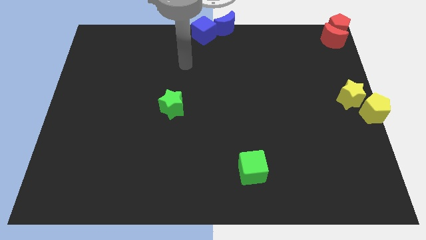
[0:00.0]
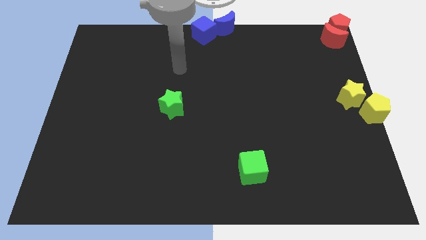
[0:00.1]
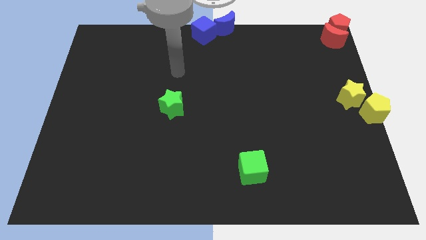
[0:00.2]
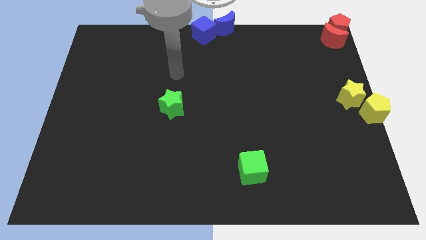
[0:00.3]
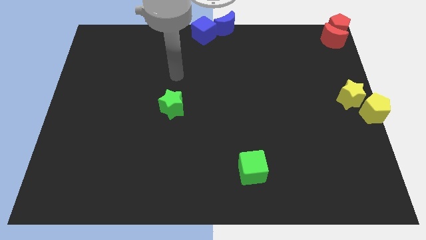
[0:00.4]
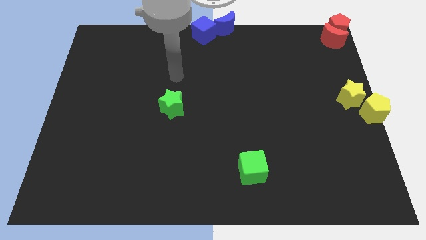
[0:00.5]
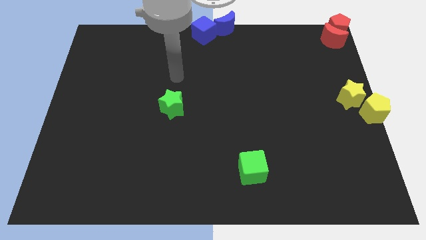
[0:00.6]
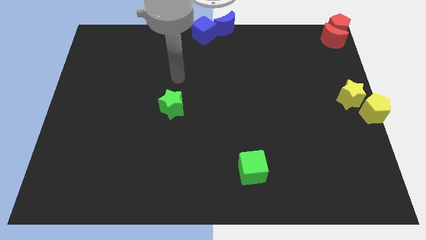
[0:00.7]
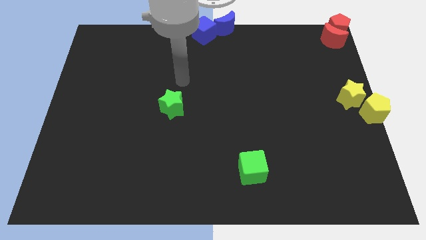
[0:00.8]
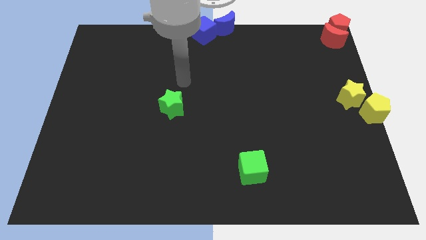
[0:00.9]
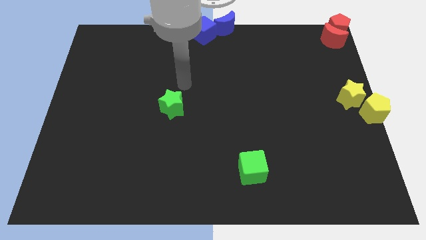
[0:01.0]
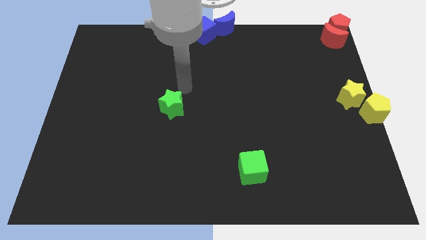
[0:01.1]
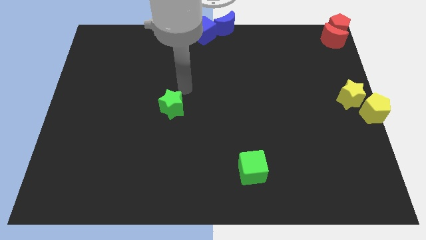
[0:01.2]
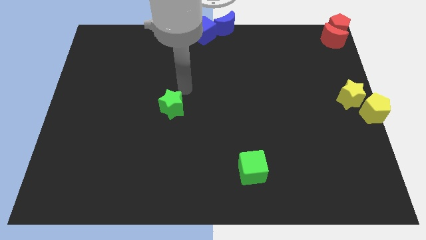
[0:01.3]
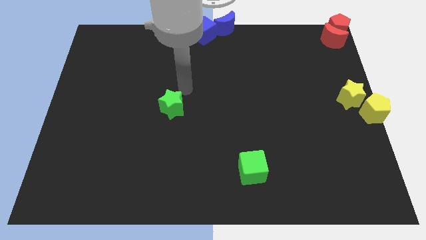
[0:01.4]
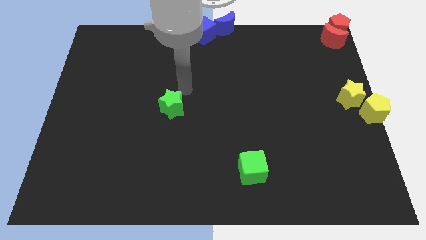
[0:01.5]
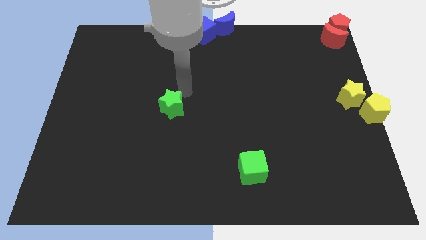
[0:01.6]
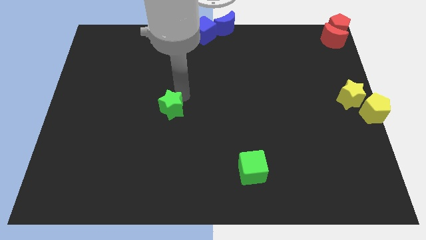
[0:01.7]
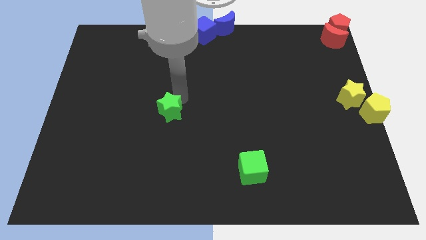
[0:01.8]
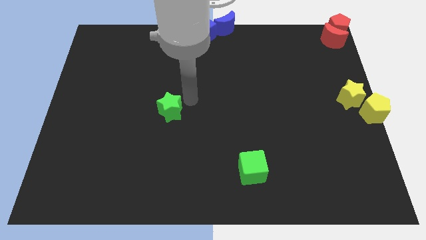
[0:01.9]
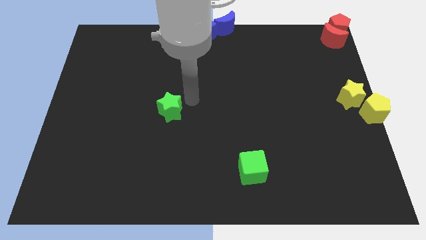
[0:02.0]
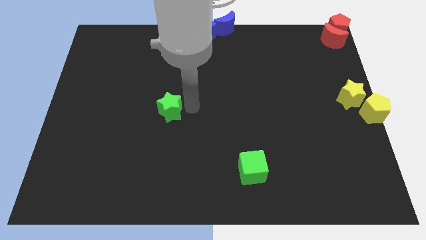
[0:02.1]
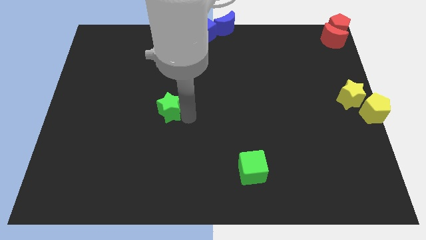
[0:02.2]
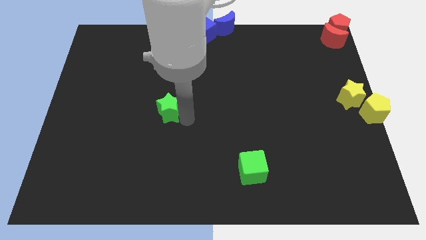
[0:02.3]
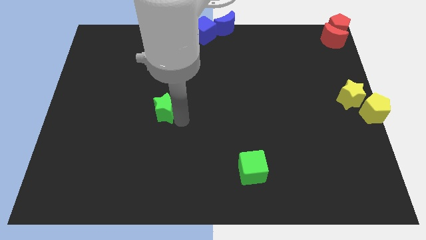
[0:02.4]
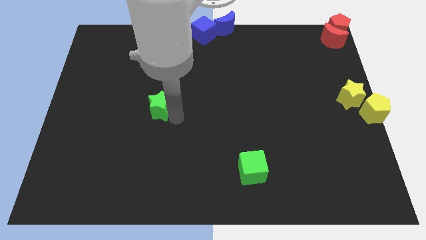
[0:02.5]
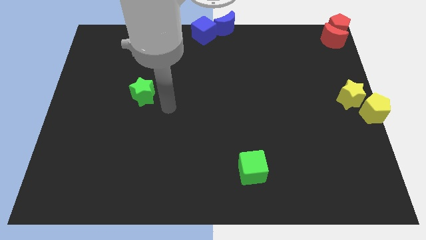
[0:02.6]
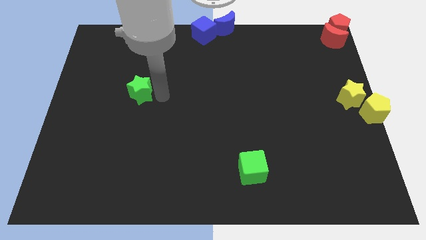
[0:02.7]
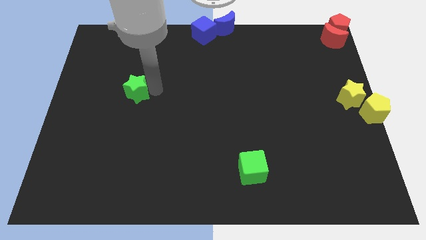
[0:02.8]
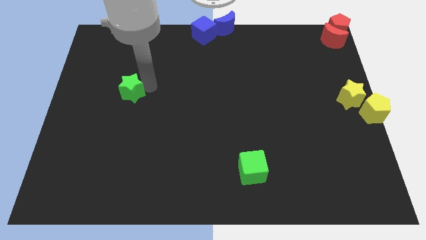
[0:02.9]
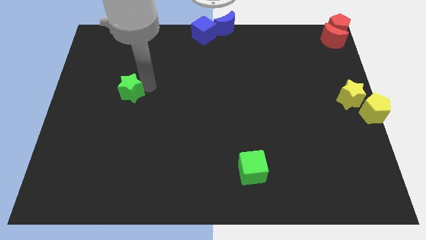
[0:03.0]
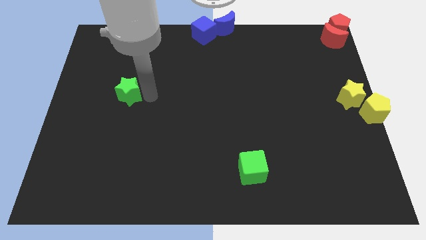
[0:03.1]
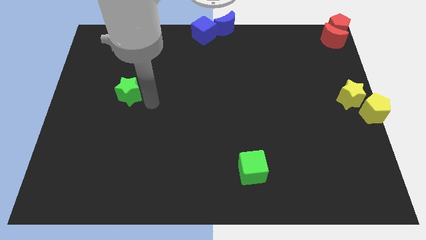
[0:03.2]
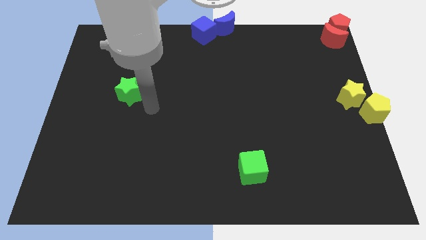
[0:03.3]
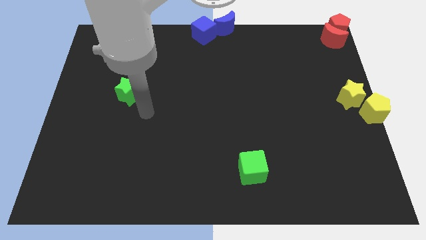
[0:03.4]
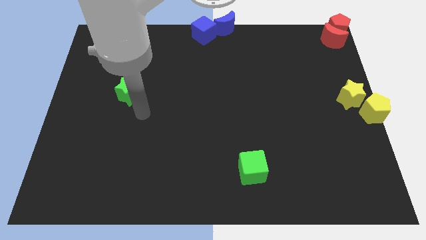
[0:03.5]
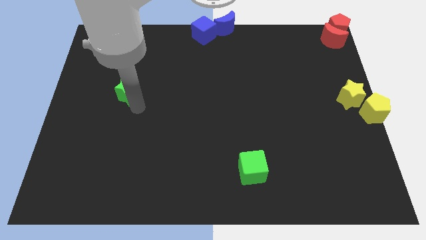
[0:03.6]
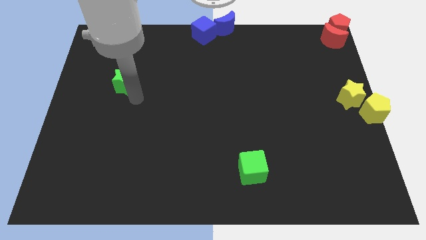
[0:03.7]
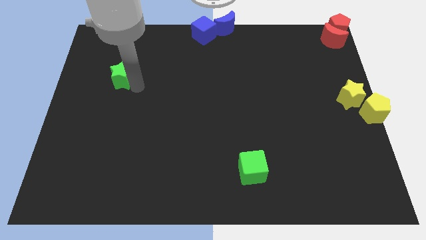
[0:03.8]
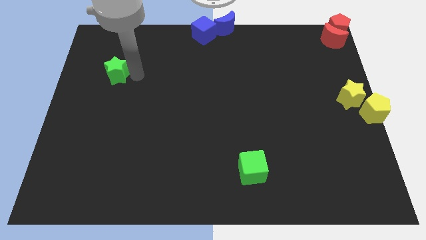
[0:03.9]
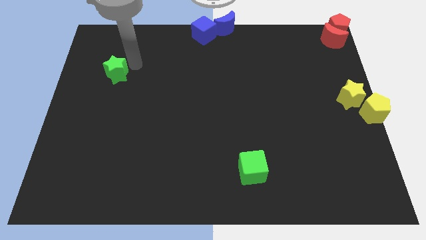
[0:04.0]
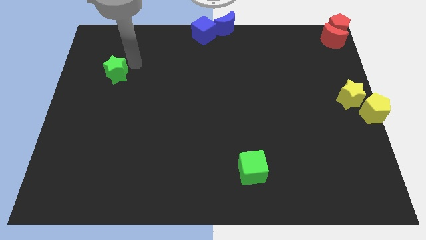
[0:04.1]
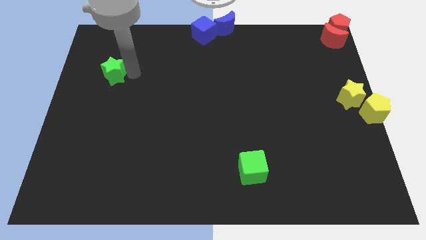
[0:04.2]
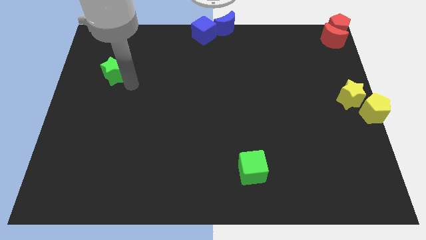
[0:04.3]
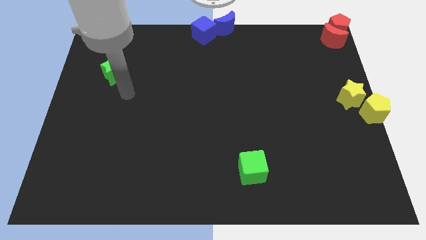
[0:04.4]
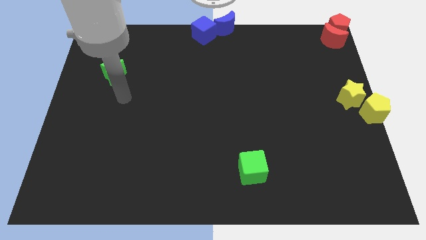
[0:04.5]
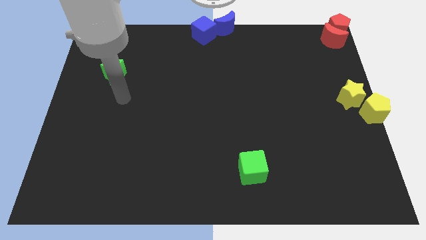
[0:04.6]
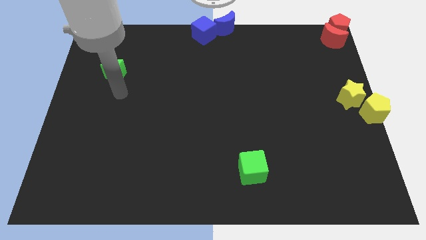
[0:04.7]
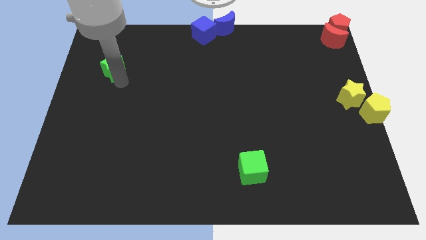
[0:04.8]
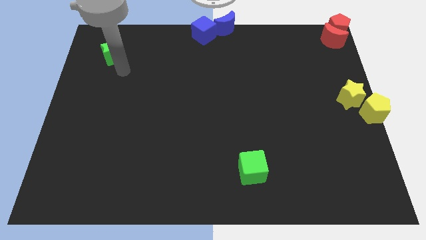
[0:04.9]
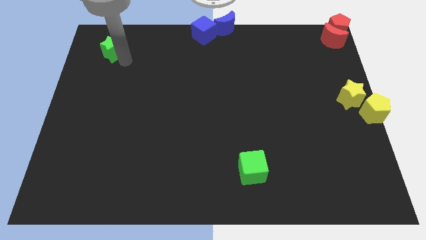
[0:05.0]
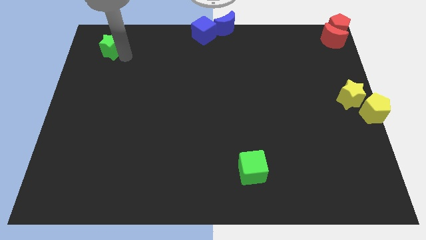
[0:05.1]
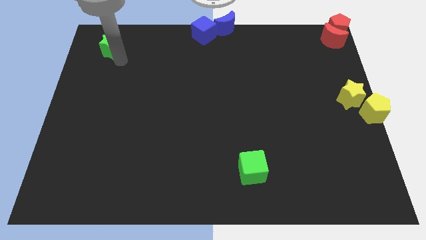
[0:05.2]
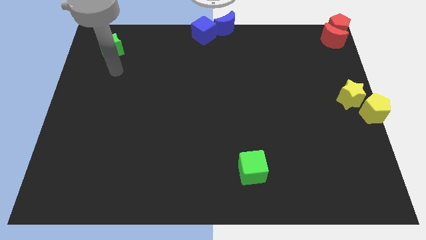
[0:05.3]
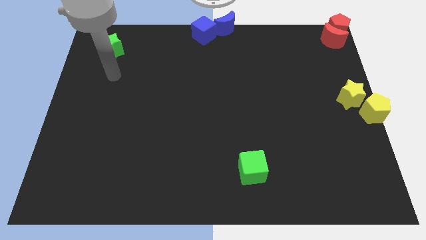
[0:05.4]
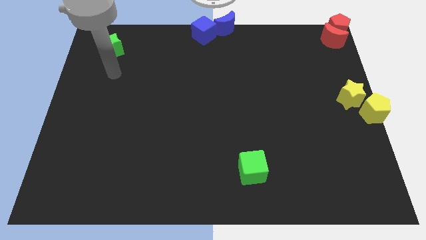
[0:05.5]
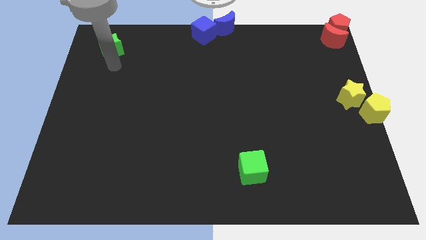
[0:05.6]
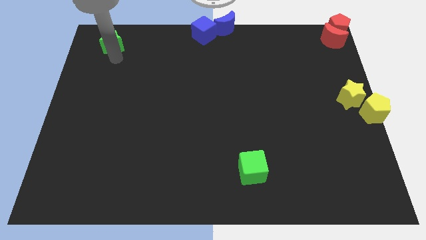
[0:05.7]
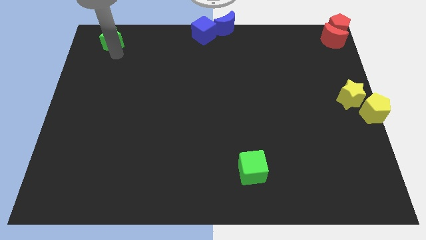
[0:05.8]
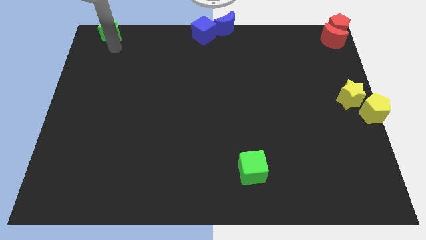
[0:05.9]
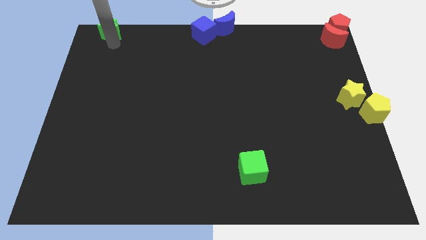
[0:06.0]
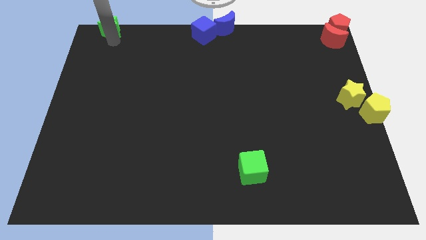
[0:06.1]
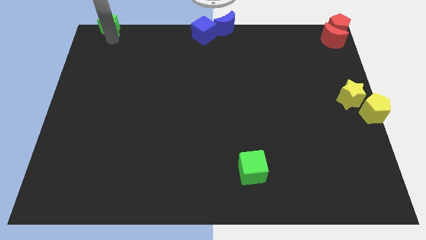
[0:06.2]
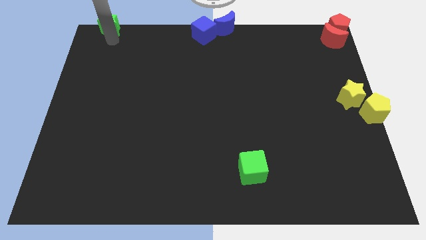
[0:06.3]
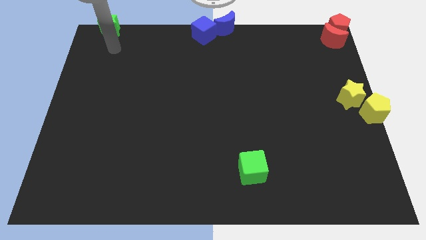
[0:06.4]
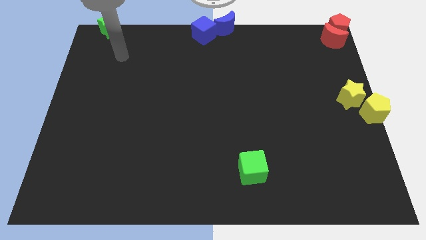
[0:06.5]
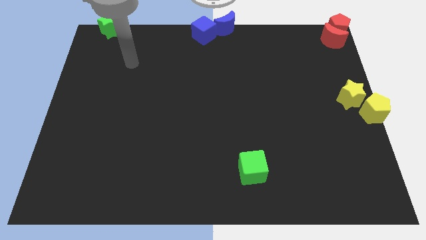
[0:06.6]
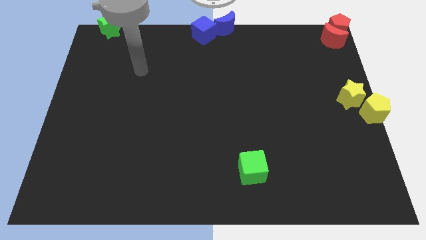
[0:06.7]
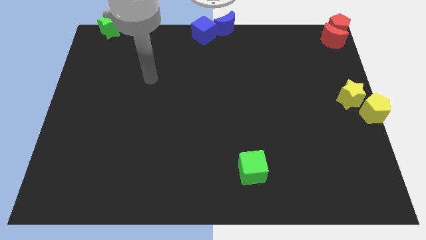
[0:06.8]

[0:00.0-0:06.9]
move green star to the top left side of the board

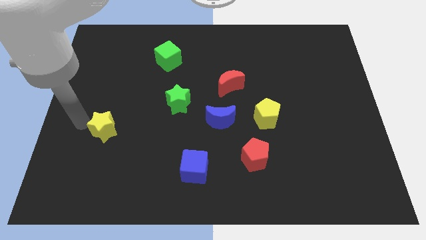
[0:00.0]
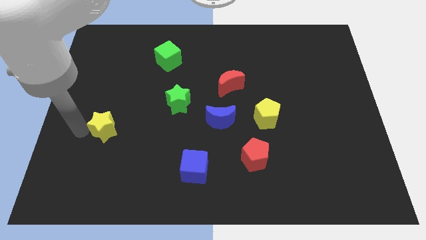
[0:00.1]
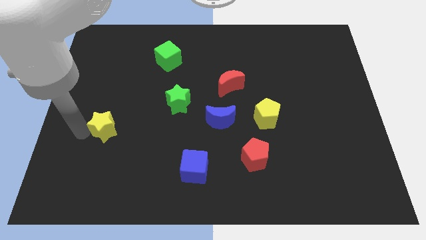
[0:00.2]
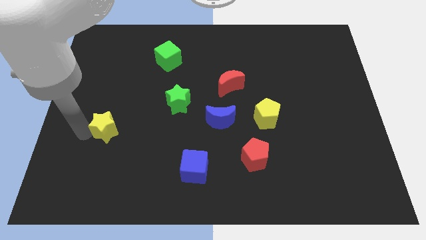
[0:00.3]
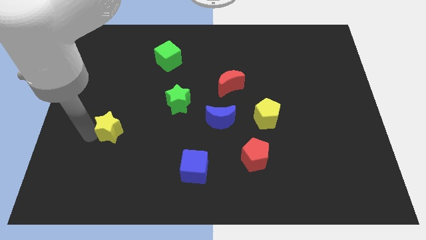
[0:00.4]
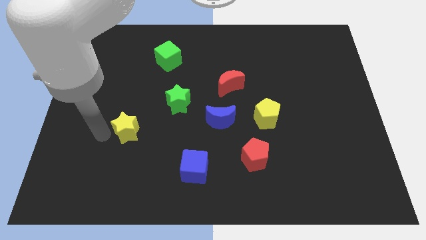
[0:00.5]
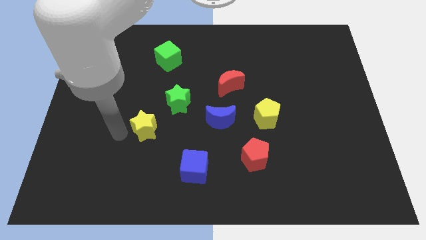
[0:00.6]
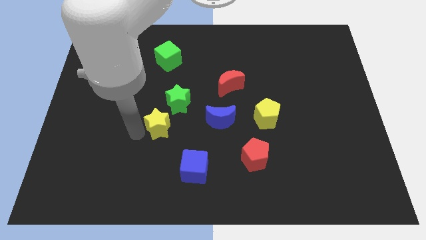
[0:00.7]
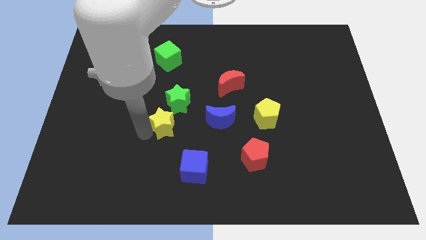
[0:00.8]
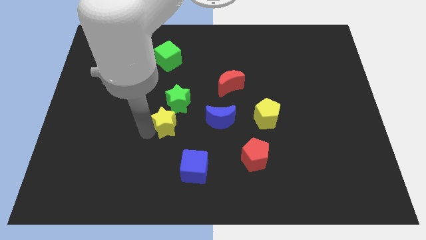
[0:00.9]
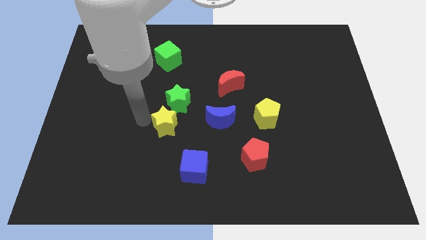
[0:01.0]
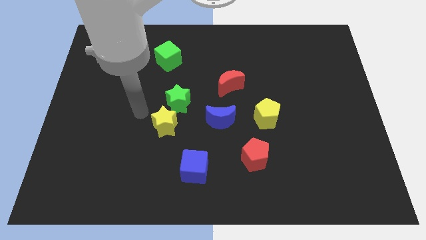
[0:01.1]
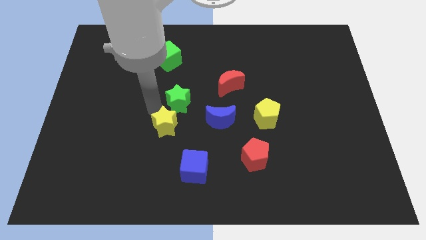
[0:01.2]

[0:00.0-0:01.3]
push the yellow star towards the bottom of the green star

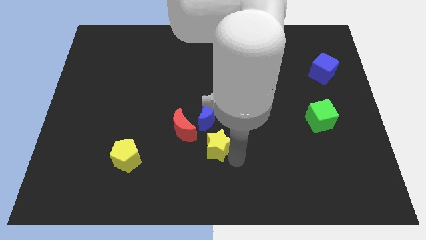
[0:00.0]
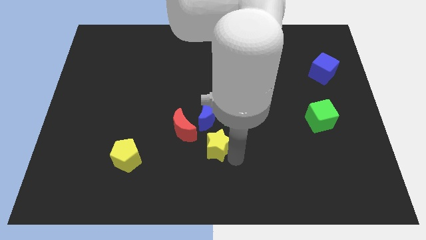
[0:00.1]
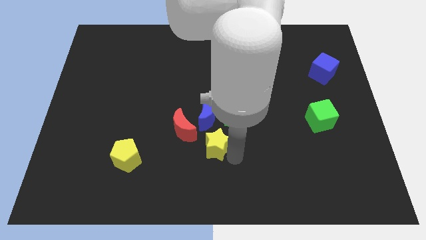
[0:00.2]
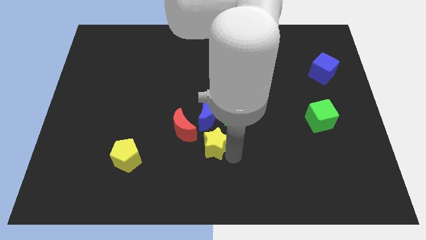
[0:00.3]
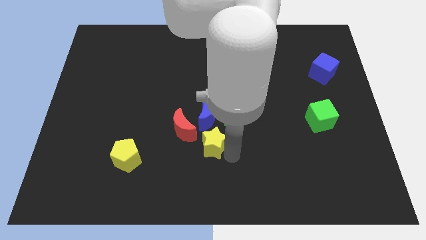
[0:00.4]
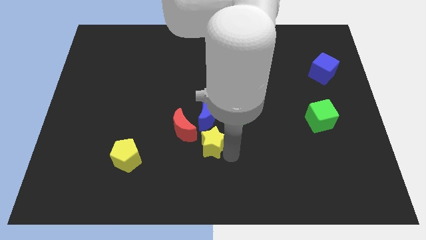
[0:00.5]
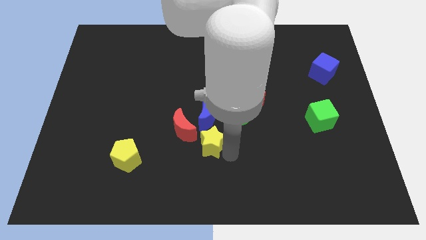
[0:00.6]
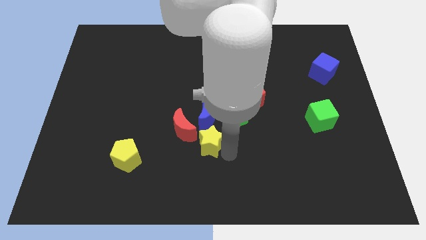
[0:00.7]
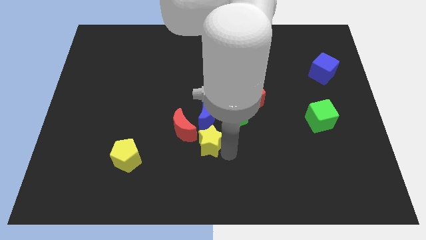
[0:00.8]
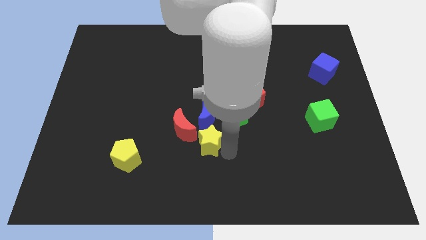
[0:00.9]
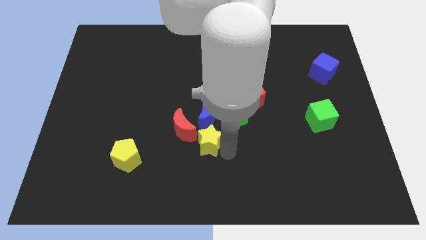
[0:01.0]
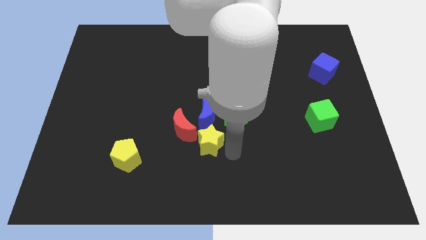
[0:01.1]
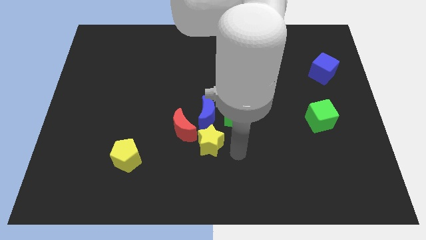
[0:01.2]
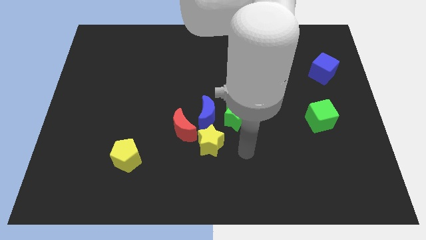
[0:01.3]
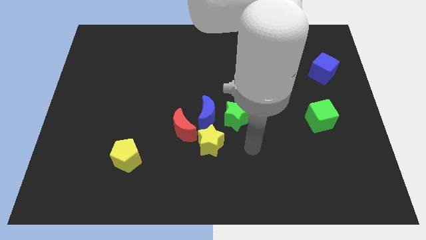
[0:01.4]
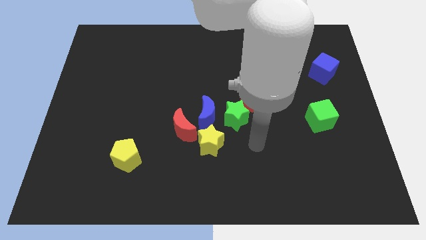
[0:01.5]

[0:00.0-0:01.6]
push the yellow star close to the blue crescent
